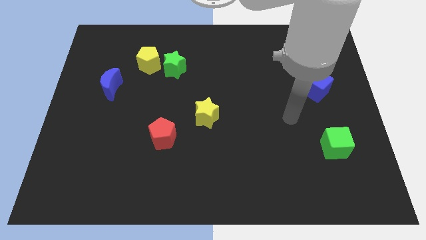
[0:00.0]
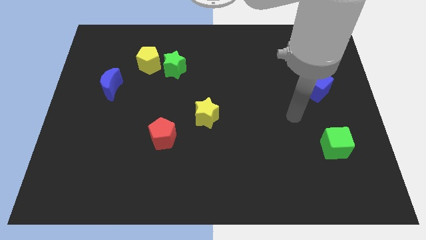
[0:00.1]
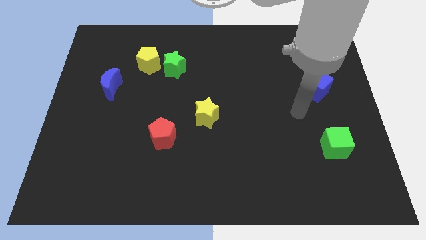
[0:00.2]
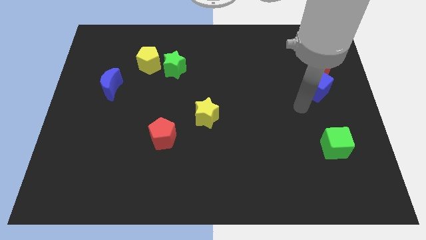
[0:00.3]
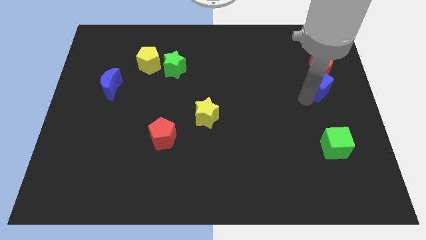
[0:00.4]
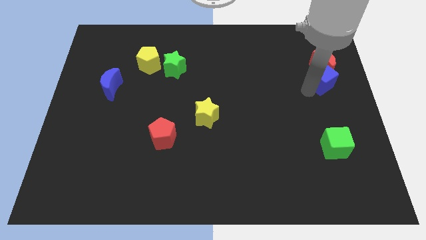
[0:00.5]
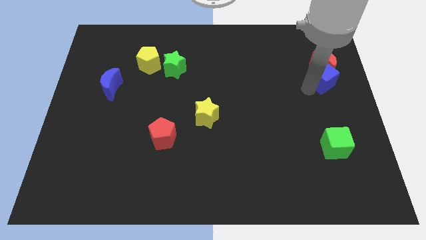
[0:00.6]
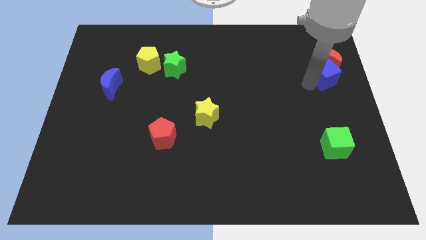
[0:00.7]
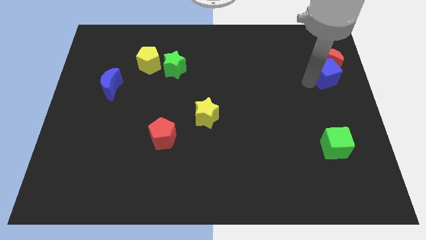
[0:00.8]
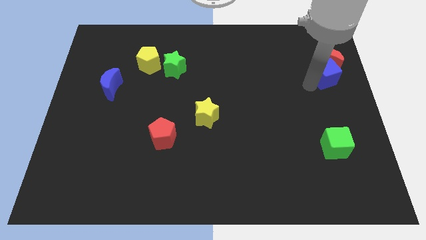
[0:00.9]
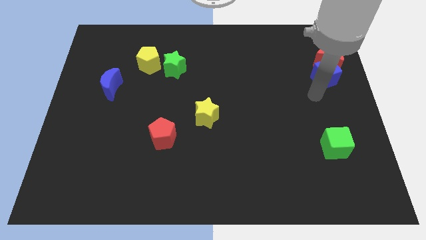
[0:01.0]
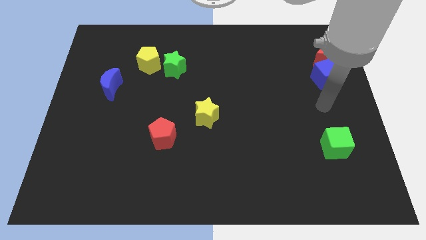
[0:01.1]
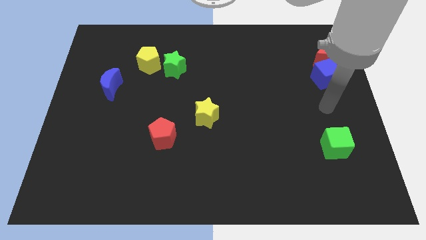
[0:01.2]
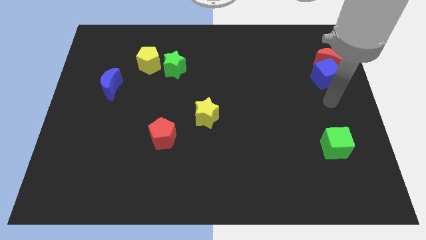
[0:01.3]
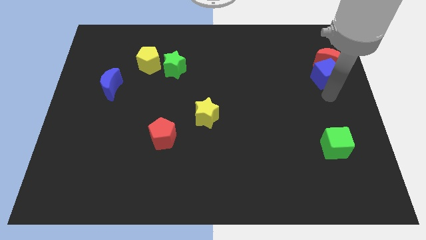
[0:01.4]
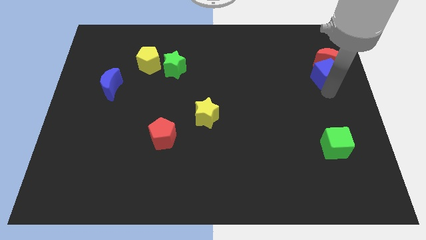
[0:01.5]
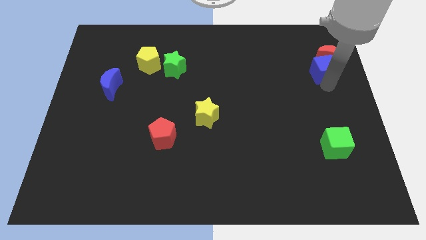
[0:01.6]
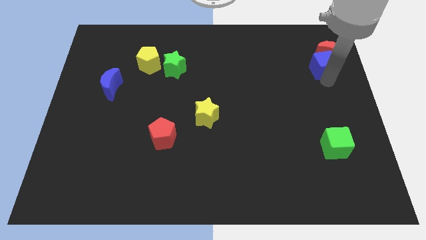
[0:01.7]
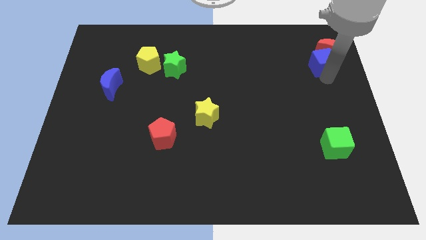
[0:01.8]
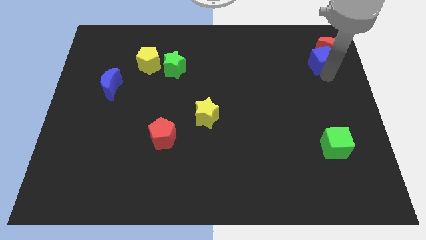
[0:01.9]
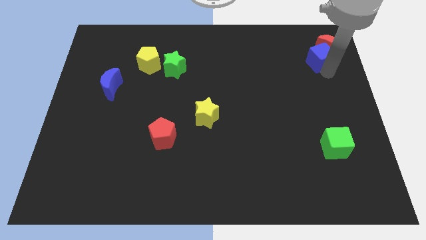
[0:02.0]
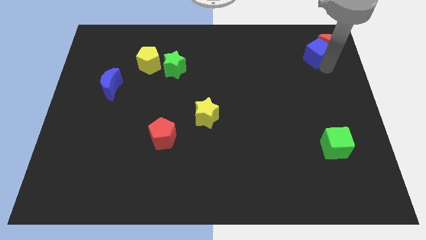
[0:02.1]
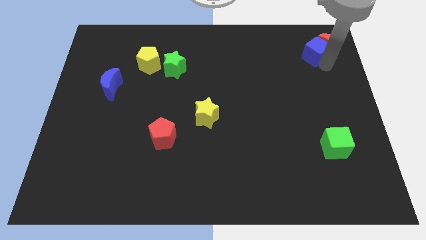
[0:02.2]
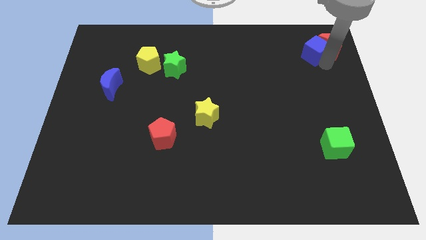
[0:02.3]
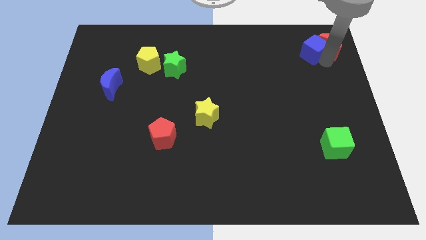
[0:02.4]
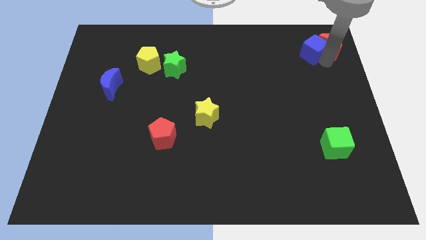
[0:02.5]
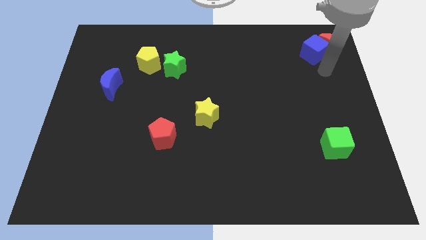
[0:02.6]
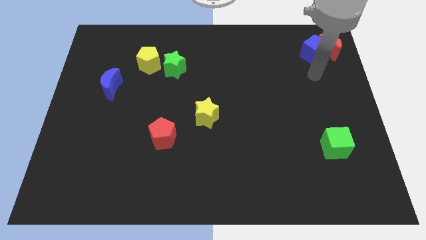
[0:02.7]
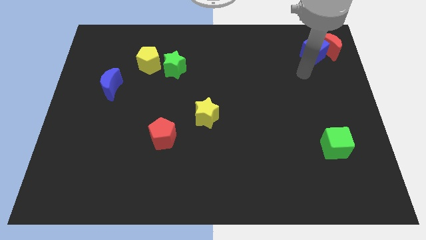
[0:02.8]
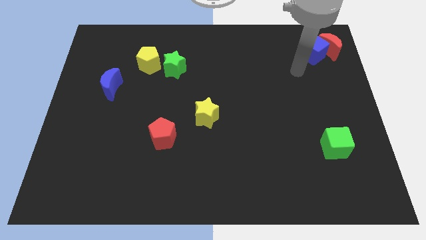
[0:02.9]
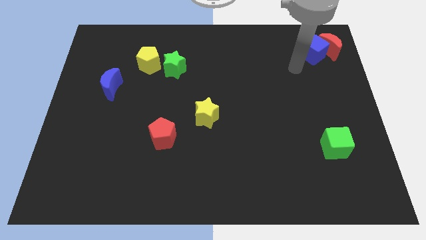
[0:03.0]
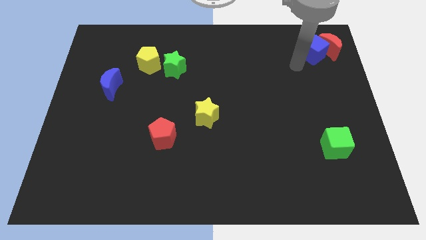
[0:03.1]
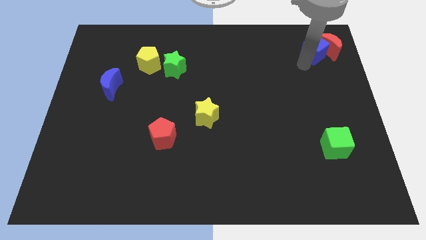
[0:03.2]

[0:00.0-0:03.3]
place blue cube and red moon vertically above green cube

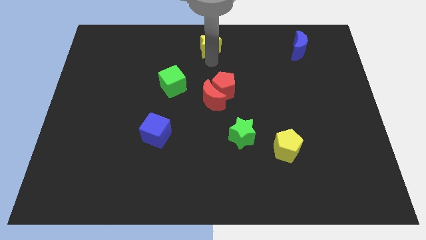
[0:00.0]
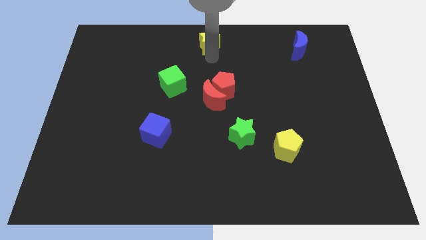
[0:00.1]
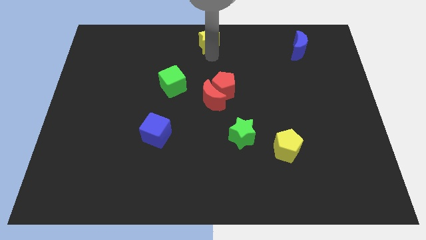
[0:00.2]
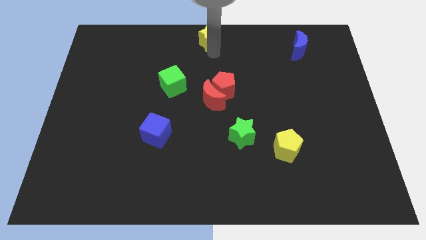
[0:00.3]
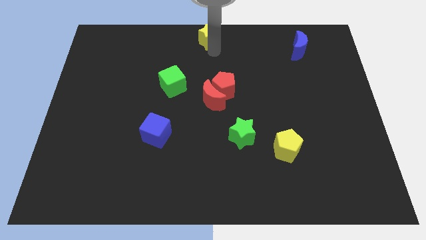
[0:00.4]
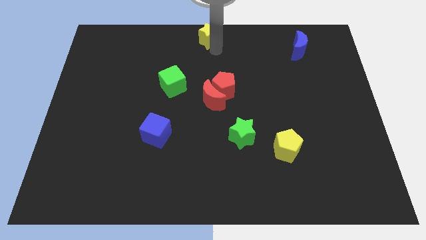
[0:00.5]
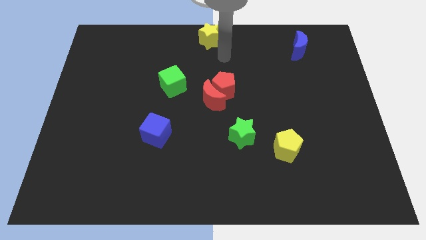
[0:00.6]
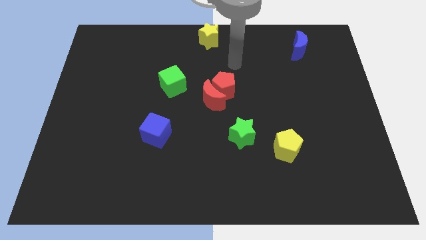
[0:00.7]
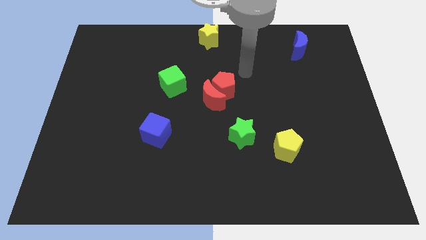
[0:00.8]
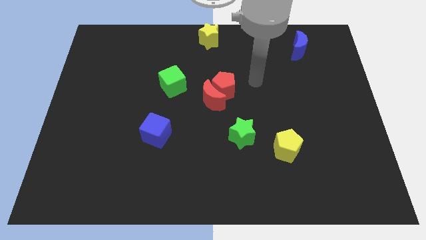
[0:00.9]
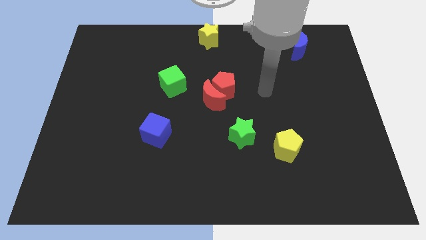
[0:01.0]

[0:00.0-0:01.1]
move yellow star to the middle of the board

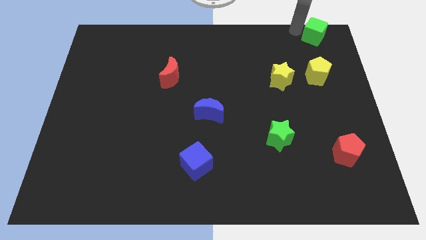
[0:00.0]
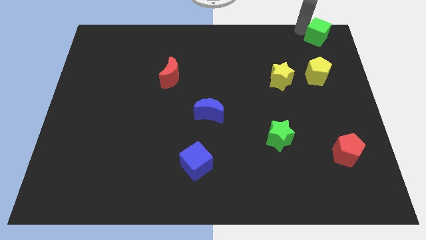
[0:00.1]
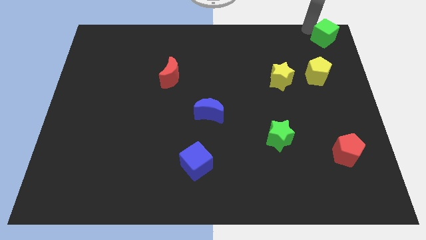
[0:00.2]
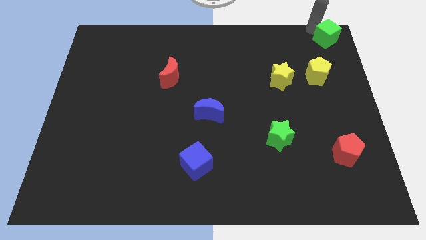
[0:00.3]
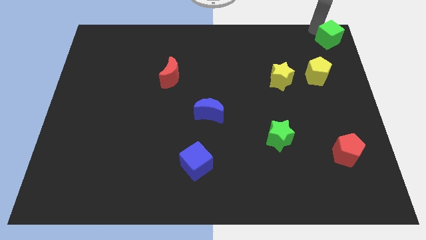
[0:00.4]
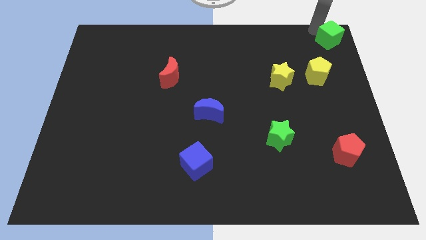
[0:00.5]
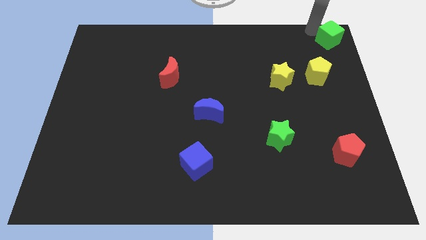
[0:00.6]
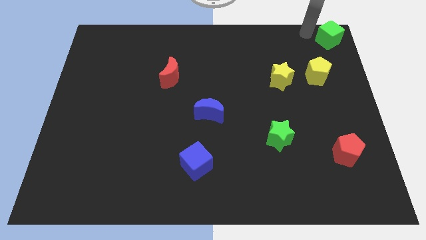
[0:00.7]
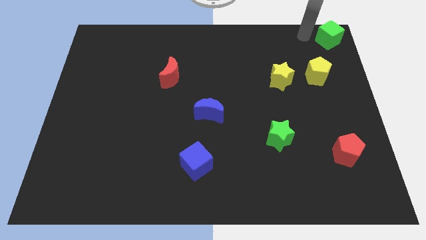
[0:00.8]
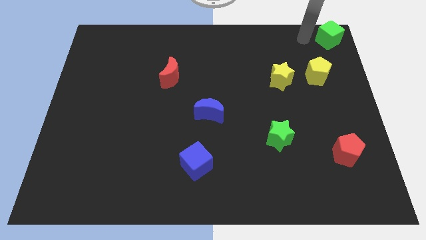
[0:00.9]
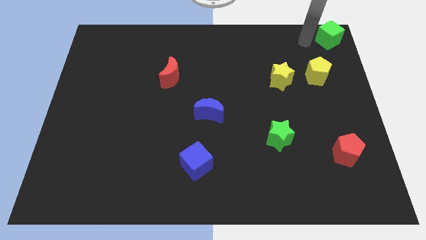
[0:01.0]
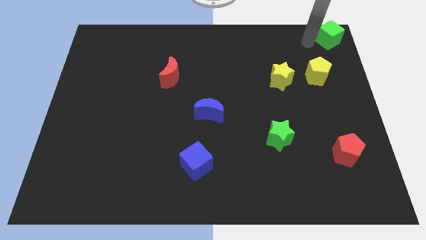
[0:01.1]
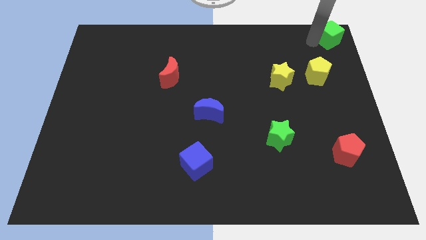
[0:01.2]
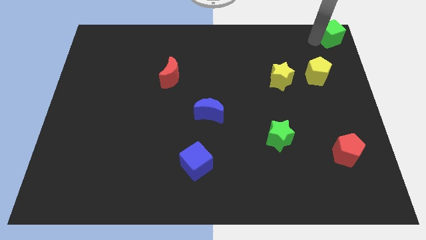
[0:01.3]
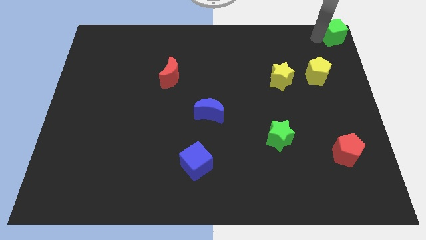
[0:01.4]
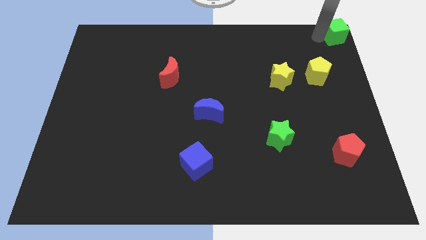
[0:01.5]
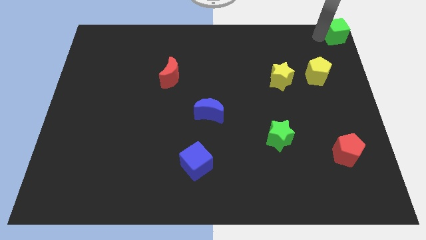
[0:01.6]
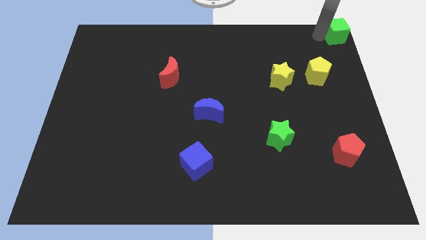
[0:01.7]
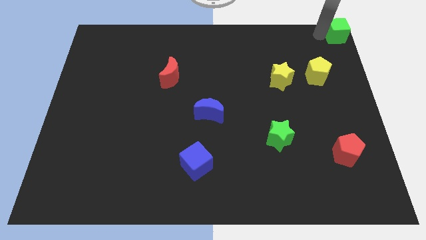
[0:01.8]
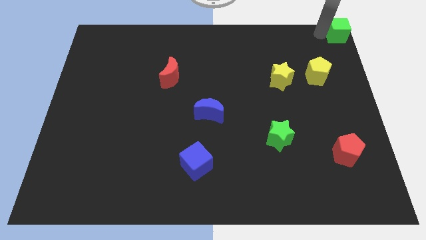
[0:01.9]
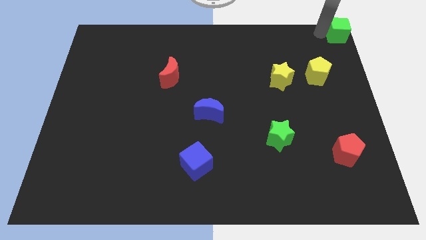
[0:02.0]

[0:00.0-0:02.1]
push the green block to the top right corner

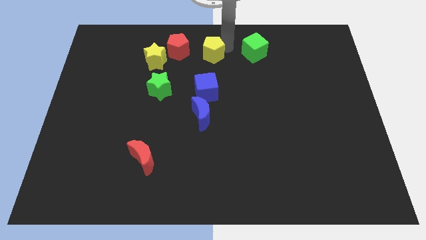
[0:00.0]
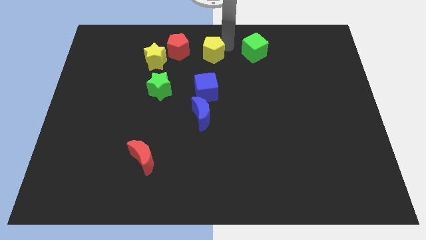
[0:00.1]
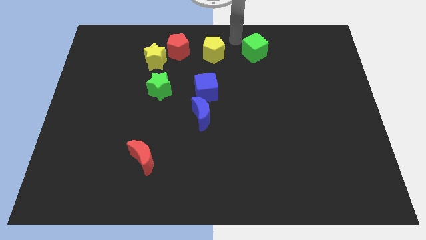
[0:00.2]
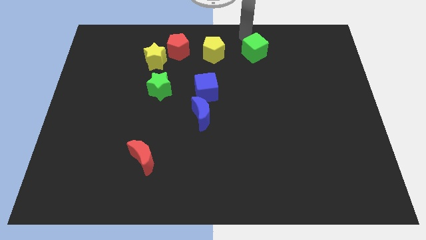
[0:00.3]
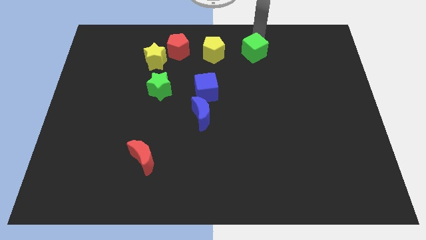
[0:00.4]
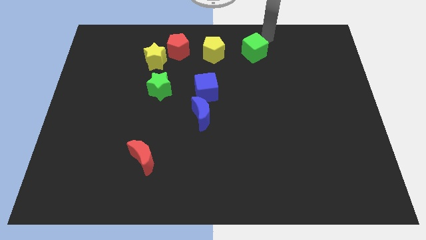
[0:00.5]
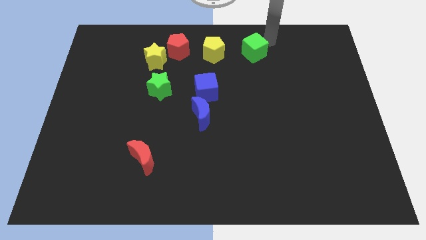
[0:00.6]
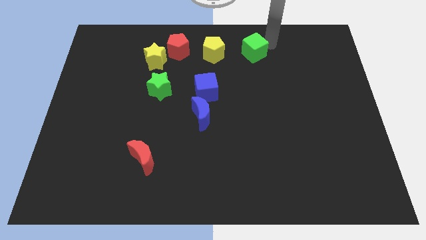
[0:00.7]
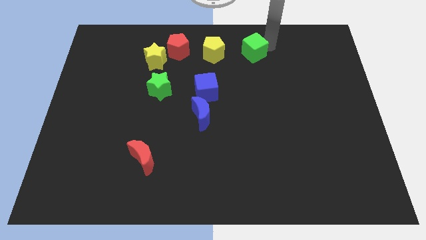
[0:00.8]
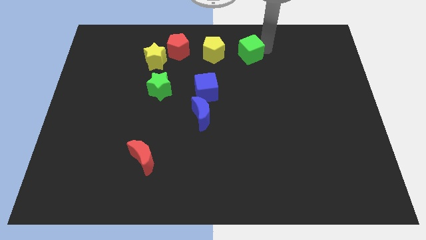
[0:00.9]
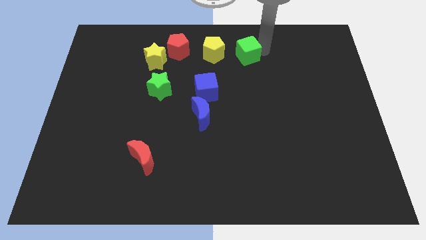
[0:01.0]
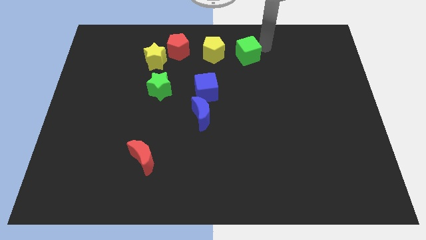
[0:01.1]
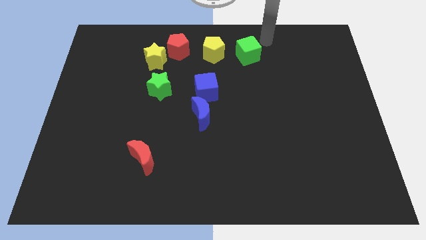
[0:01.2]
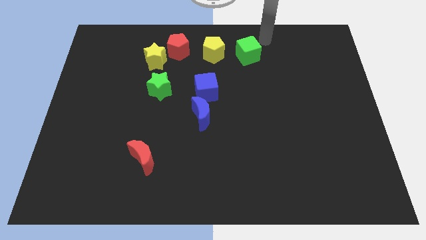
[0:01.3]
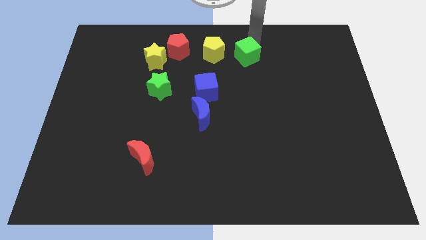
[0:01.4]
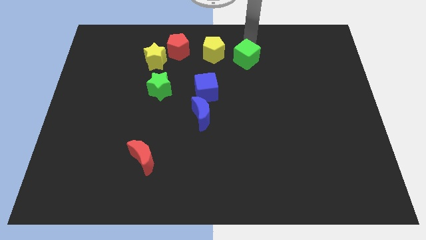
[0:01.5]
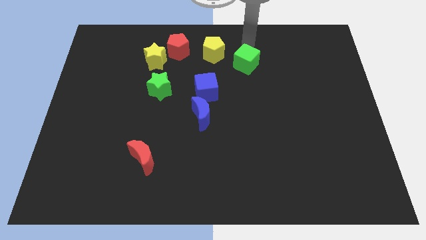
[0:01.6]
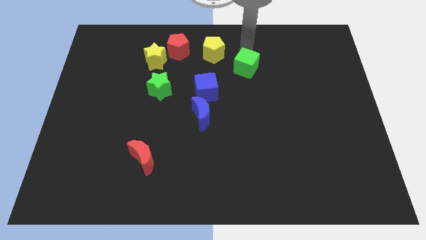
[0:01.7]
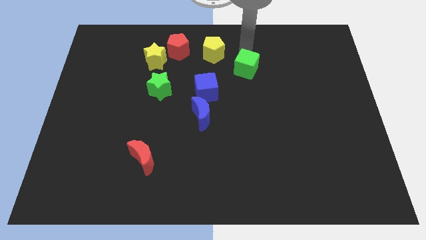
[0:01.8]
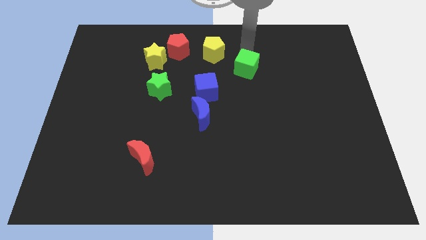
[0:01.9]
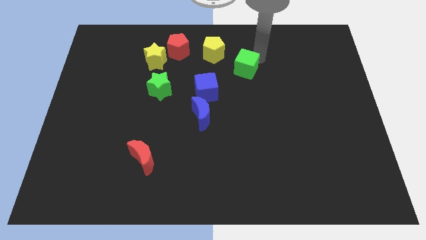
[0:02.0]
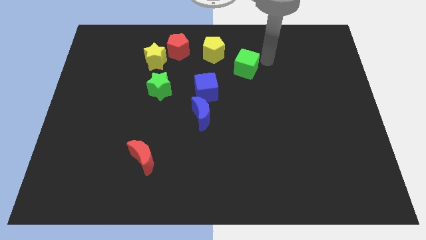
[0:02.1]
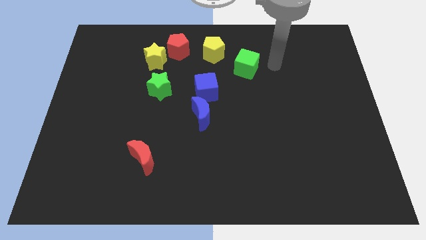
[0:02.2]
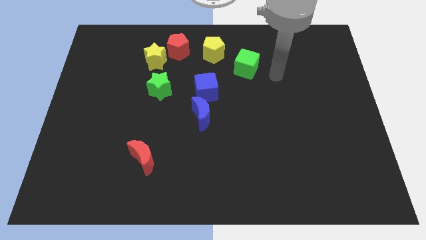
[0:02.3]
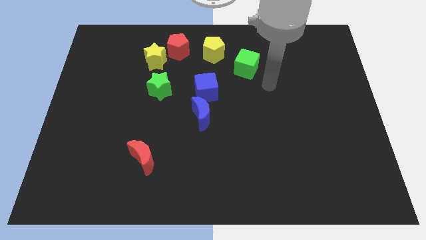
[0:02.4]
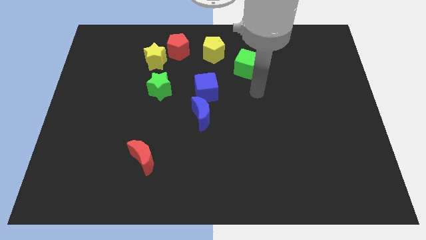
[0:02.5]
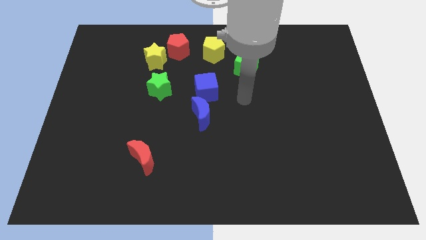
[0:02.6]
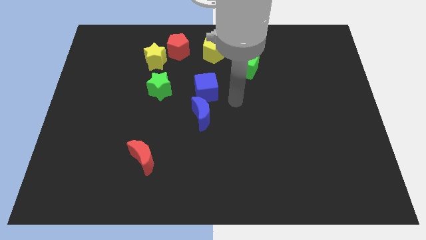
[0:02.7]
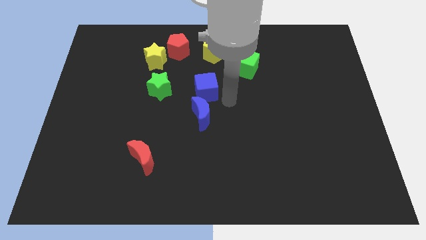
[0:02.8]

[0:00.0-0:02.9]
move the green cube to the bottom right of the yellow pentagon
